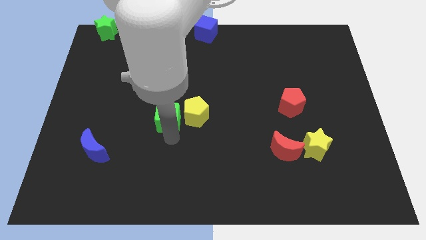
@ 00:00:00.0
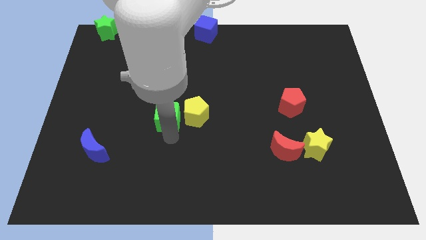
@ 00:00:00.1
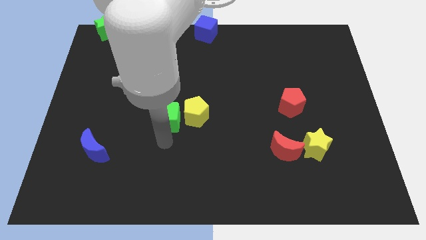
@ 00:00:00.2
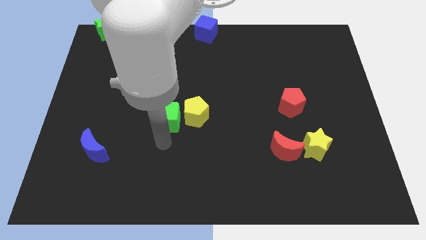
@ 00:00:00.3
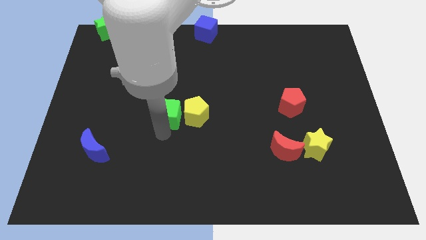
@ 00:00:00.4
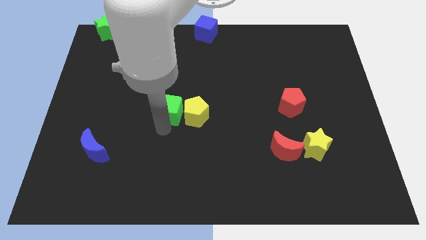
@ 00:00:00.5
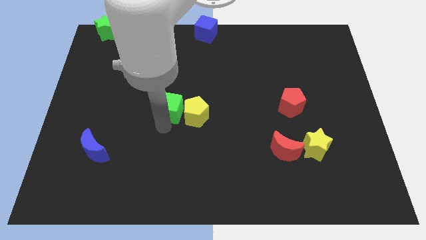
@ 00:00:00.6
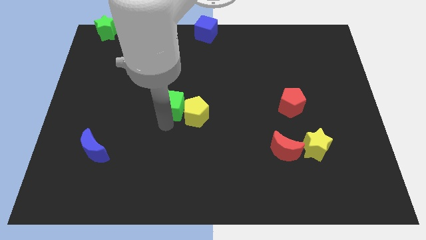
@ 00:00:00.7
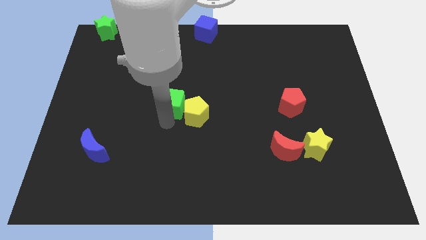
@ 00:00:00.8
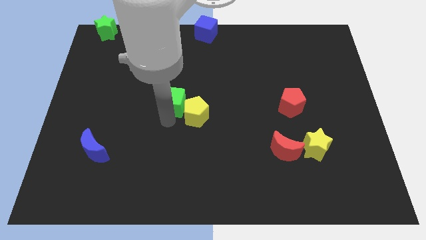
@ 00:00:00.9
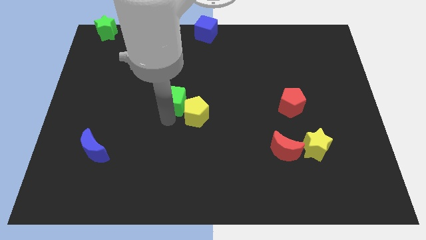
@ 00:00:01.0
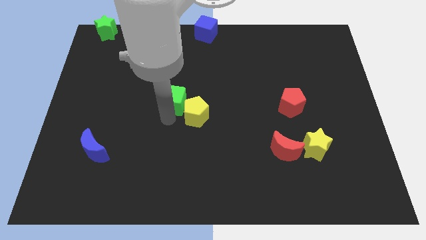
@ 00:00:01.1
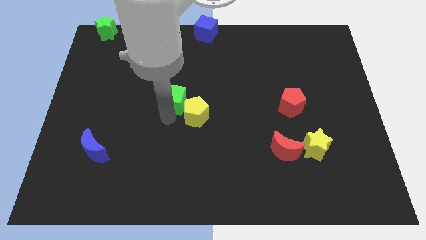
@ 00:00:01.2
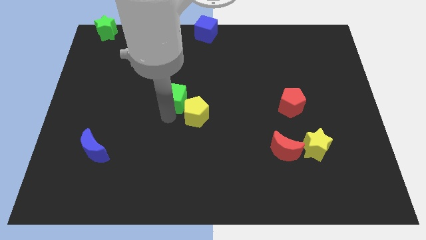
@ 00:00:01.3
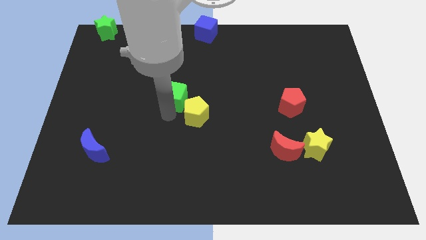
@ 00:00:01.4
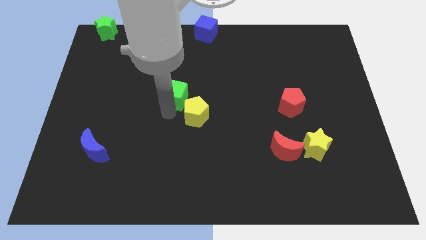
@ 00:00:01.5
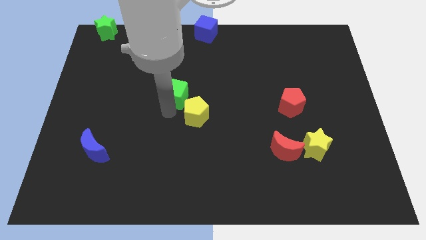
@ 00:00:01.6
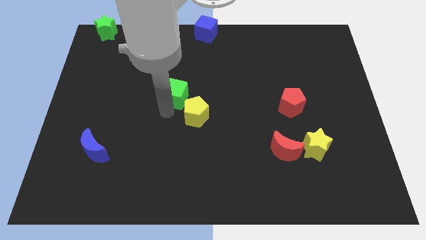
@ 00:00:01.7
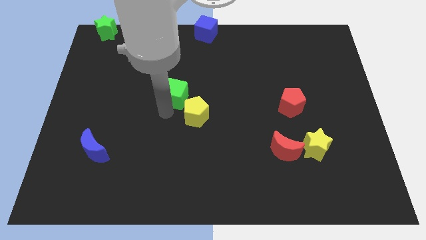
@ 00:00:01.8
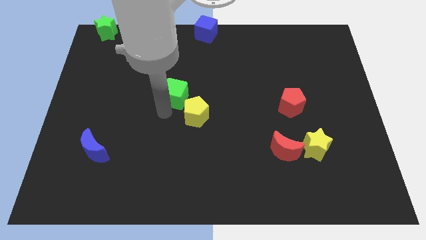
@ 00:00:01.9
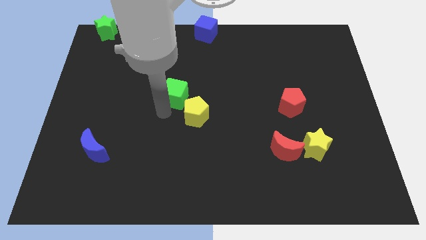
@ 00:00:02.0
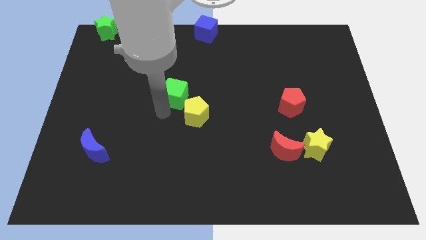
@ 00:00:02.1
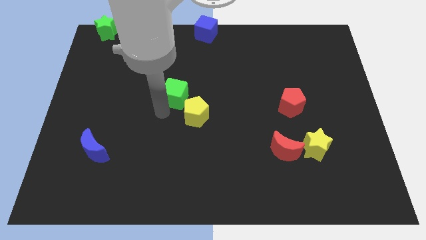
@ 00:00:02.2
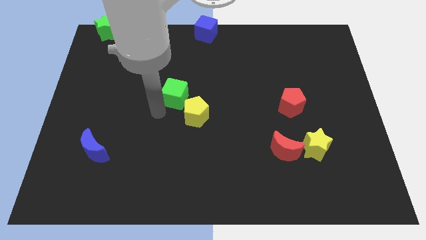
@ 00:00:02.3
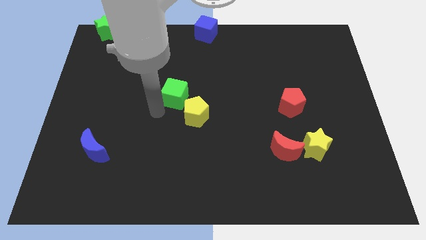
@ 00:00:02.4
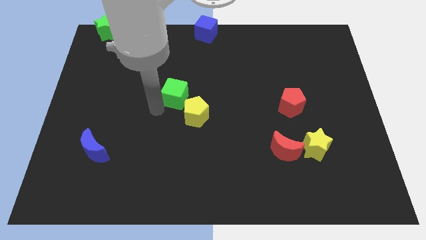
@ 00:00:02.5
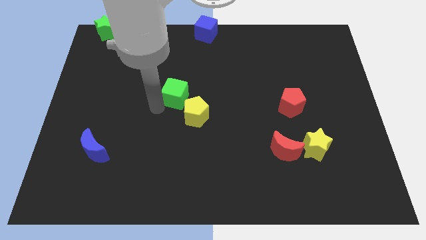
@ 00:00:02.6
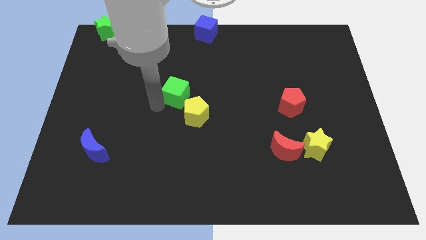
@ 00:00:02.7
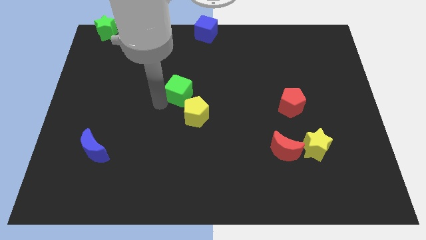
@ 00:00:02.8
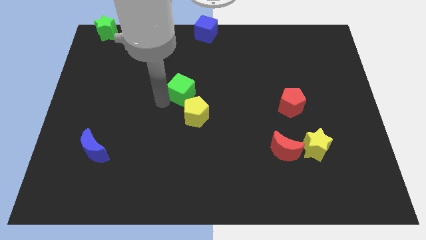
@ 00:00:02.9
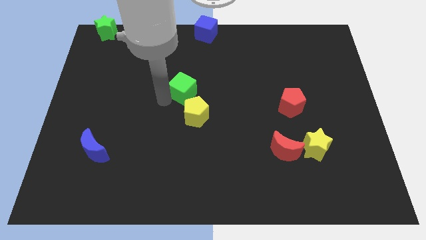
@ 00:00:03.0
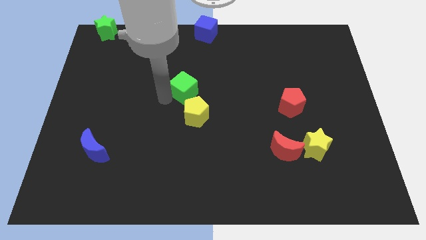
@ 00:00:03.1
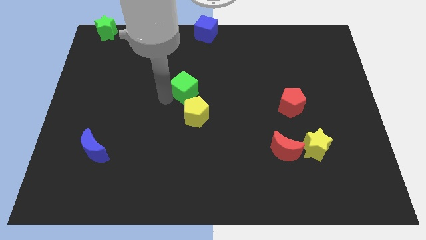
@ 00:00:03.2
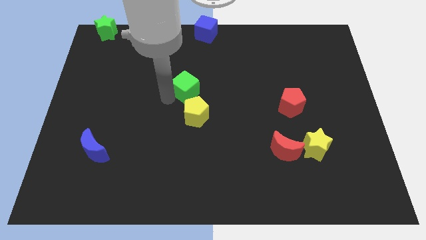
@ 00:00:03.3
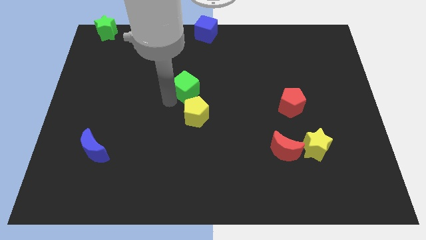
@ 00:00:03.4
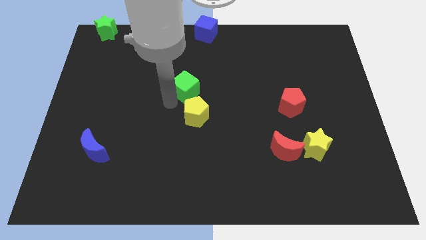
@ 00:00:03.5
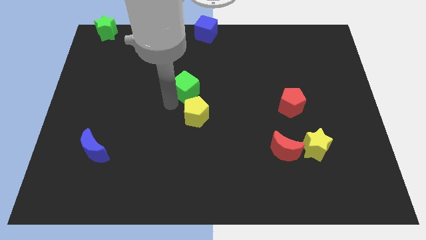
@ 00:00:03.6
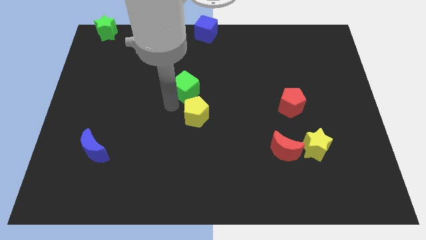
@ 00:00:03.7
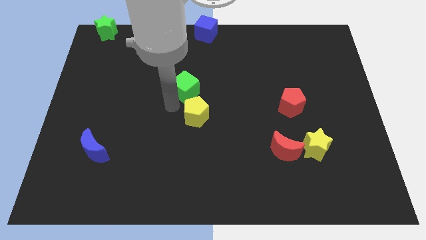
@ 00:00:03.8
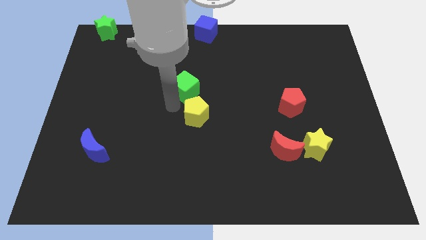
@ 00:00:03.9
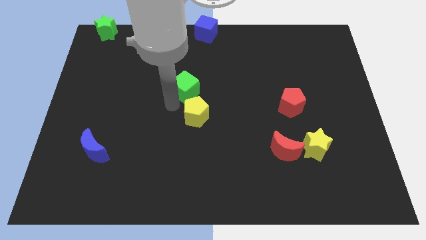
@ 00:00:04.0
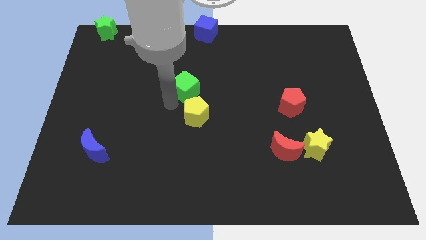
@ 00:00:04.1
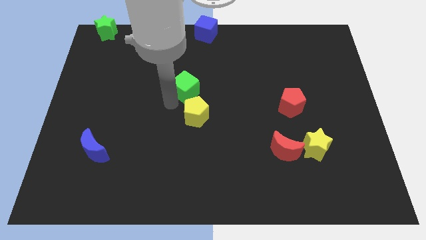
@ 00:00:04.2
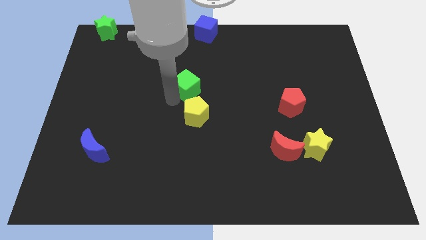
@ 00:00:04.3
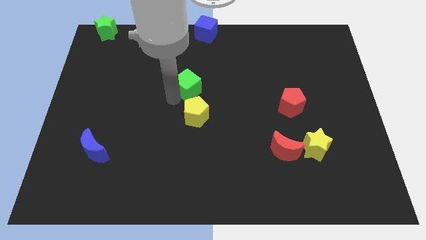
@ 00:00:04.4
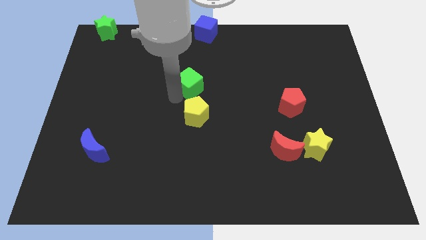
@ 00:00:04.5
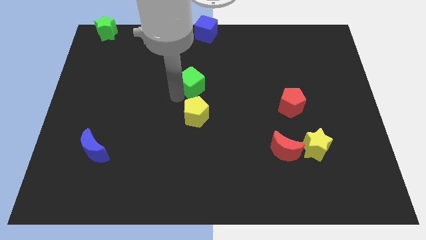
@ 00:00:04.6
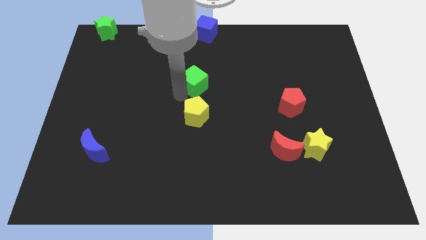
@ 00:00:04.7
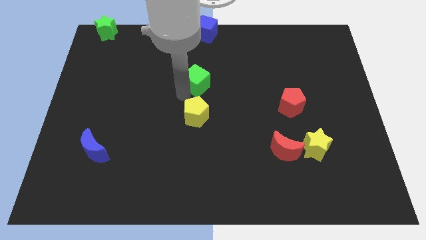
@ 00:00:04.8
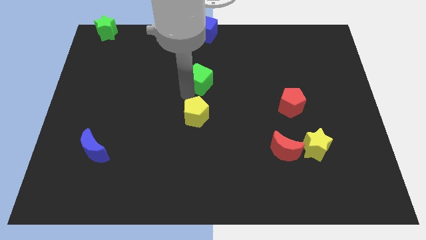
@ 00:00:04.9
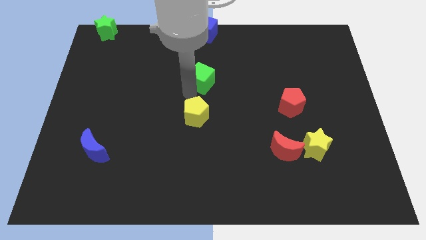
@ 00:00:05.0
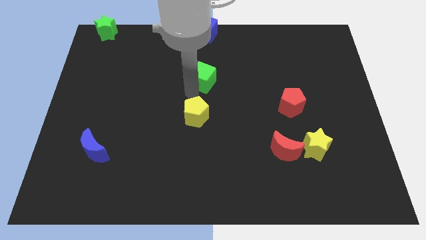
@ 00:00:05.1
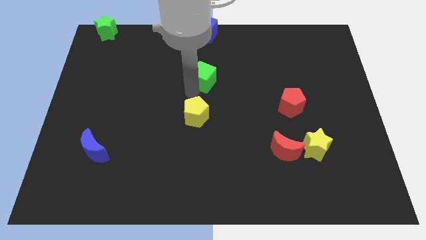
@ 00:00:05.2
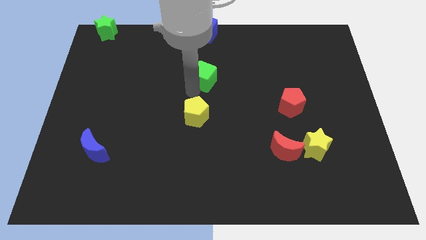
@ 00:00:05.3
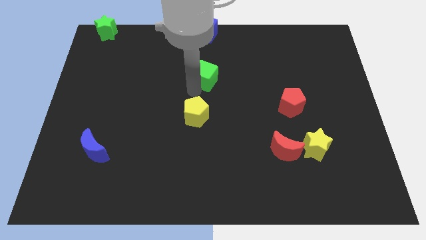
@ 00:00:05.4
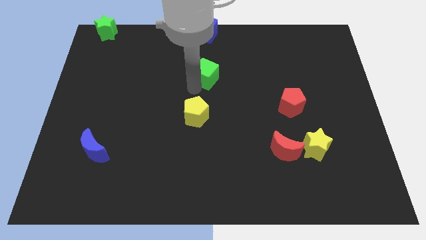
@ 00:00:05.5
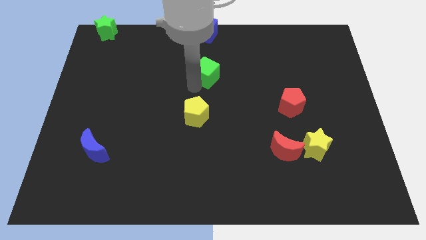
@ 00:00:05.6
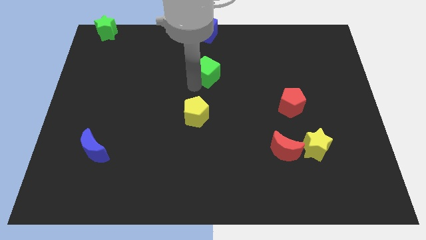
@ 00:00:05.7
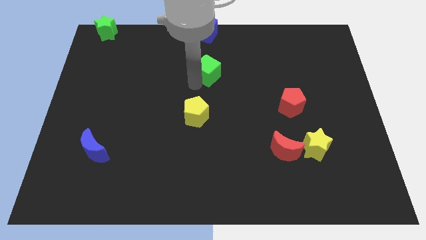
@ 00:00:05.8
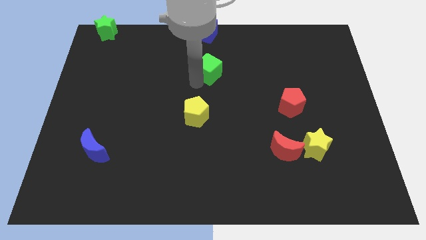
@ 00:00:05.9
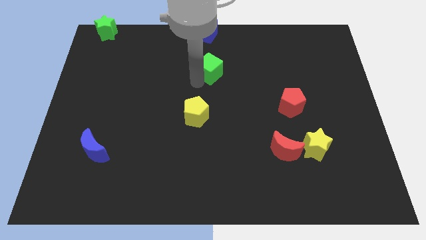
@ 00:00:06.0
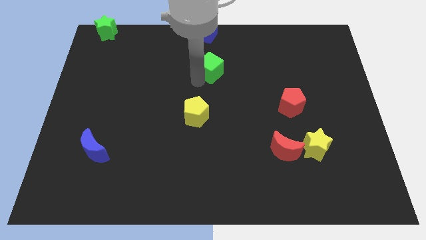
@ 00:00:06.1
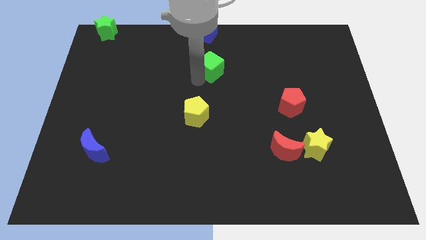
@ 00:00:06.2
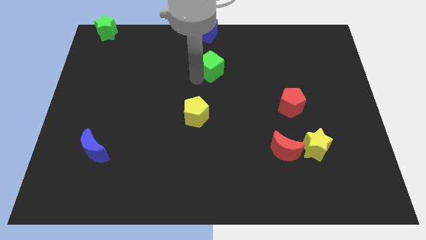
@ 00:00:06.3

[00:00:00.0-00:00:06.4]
move the green cube below the blue cube

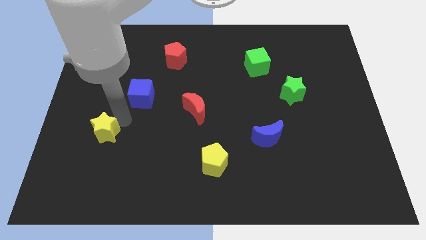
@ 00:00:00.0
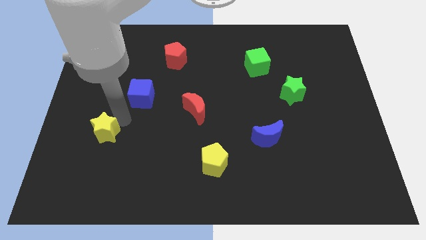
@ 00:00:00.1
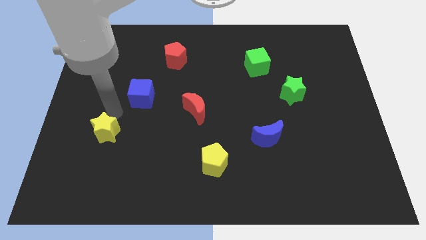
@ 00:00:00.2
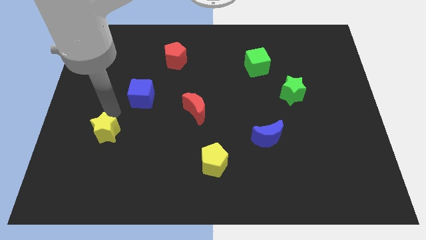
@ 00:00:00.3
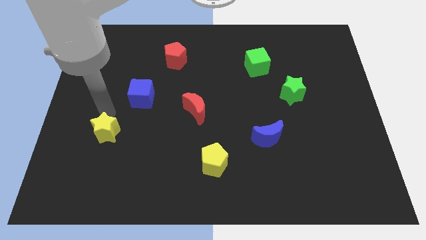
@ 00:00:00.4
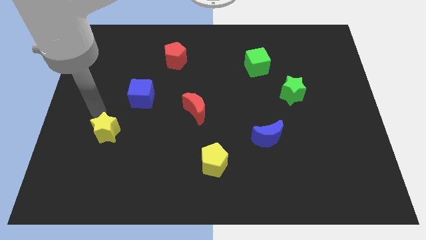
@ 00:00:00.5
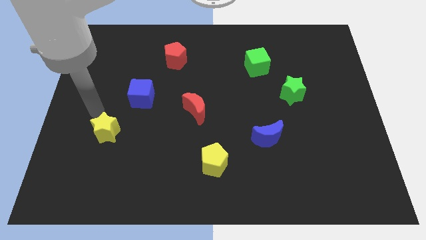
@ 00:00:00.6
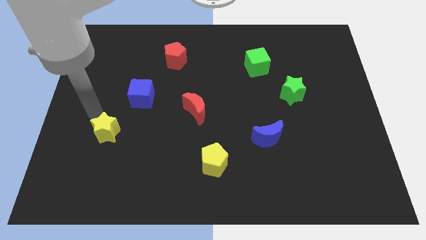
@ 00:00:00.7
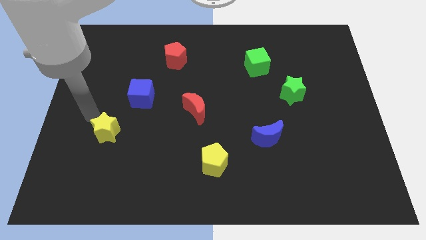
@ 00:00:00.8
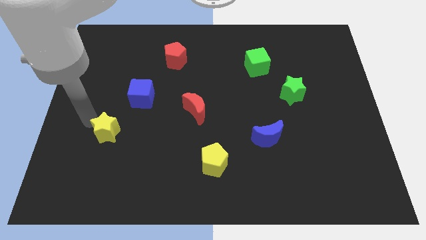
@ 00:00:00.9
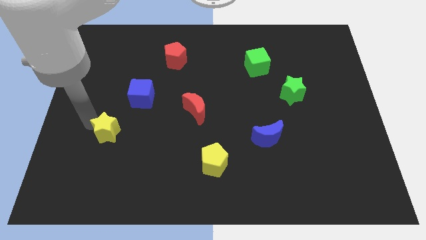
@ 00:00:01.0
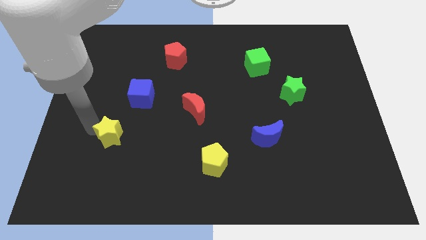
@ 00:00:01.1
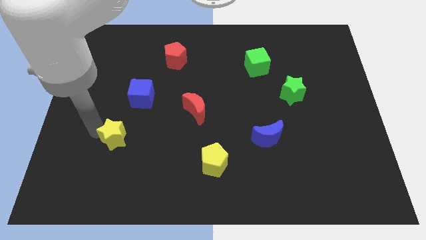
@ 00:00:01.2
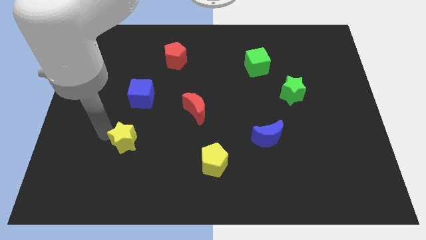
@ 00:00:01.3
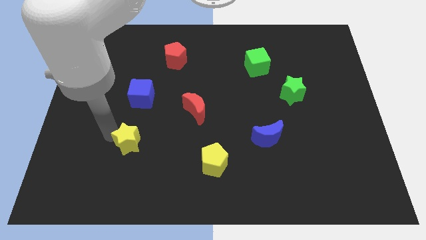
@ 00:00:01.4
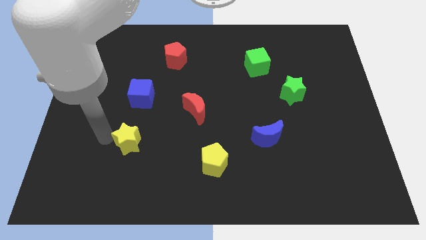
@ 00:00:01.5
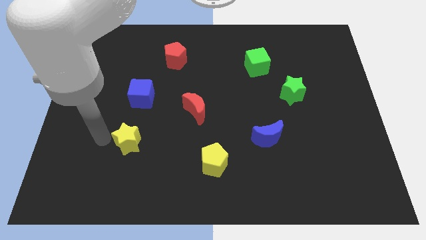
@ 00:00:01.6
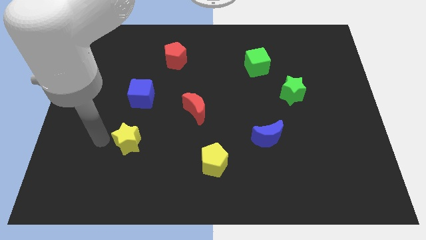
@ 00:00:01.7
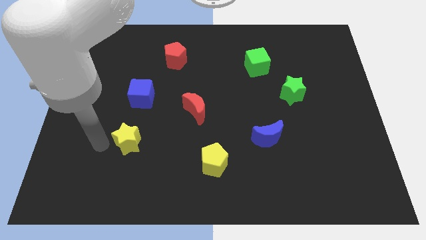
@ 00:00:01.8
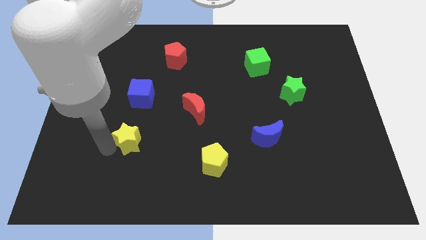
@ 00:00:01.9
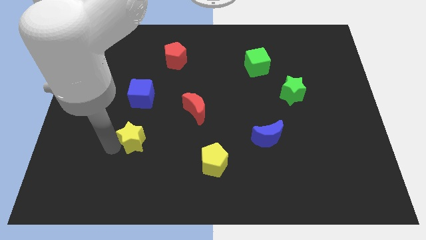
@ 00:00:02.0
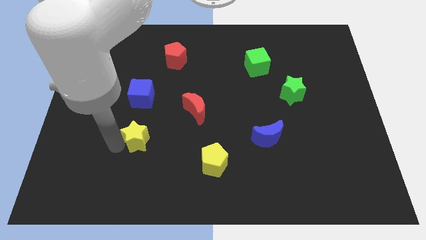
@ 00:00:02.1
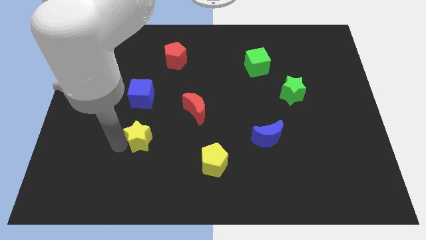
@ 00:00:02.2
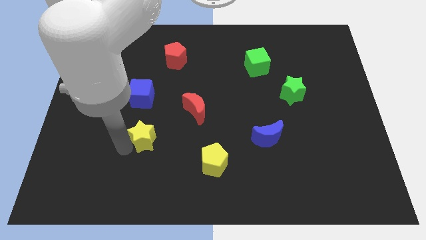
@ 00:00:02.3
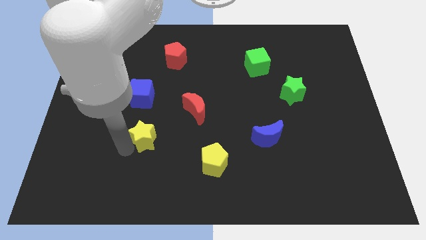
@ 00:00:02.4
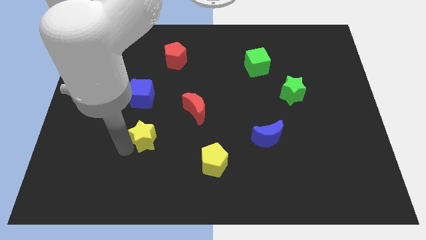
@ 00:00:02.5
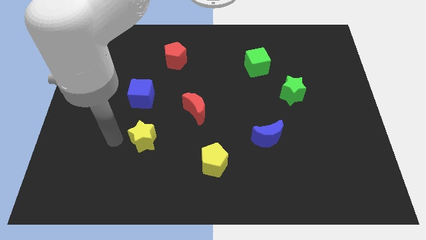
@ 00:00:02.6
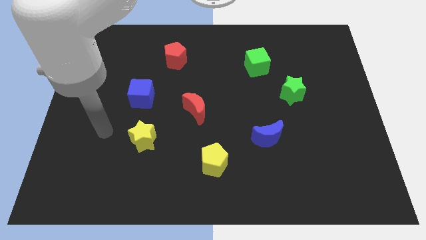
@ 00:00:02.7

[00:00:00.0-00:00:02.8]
move the yellow star to the bottom of the blue cube
